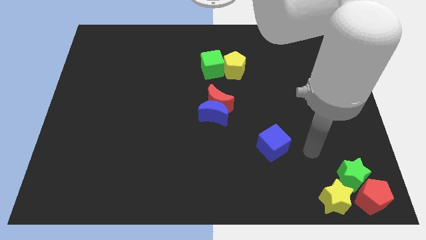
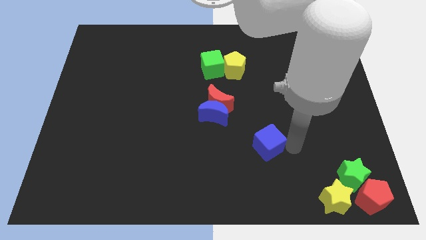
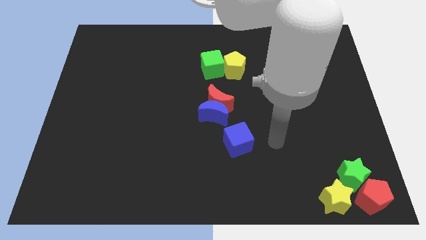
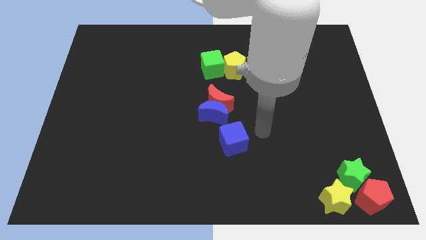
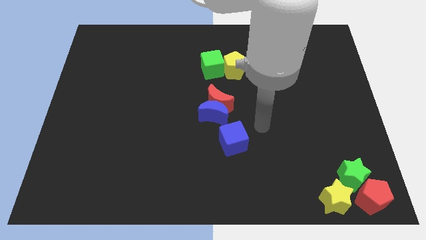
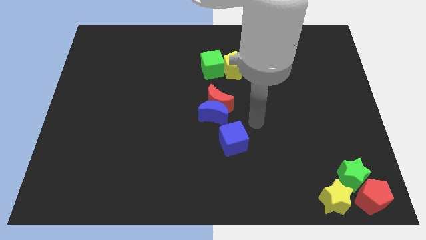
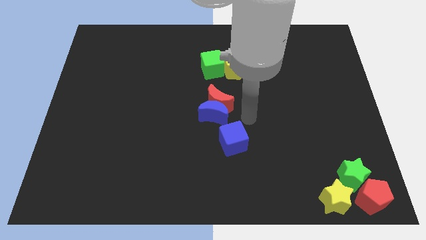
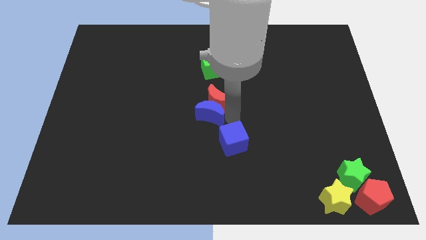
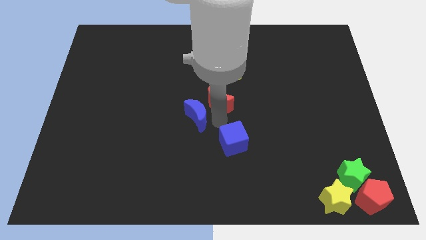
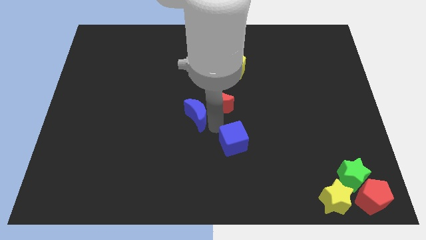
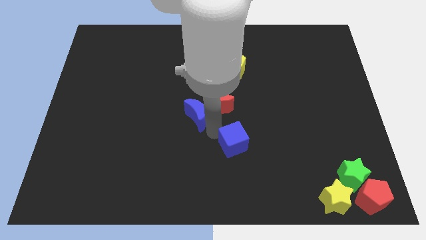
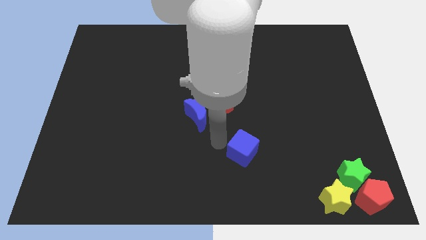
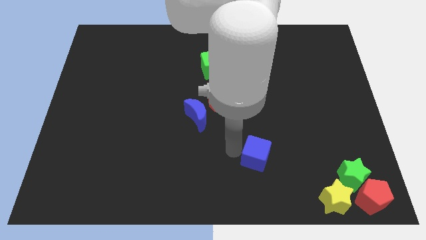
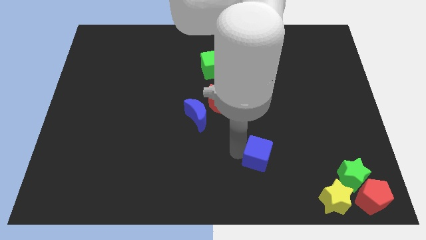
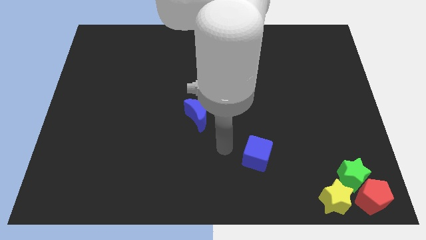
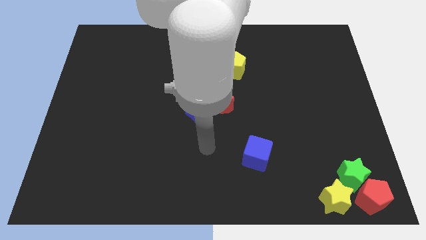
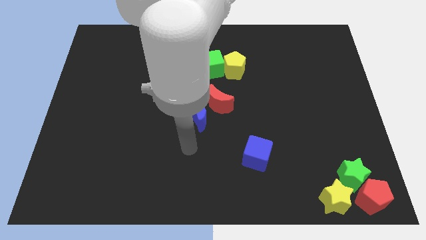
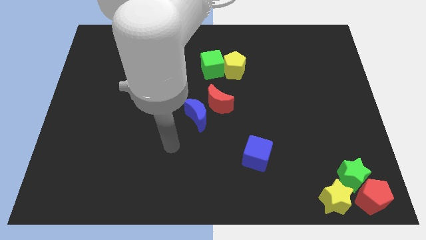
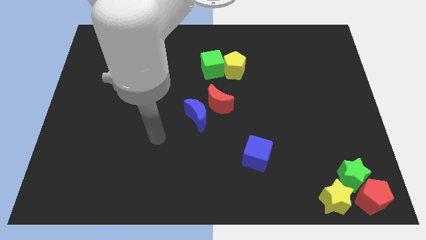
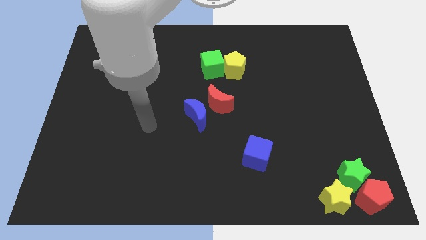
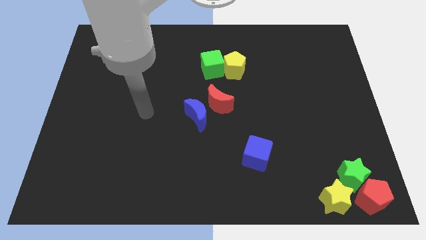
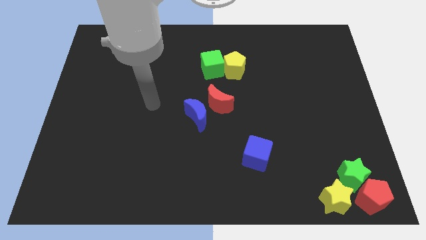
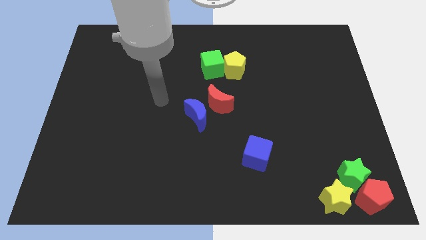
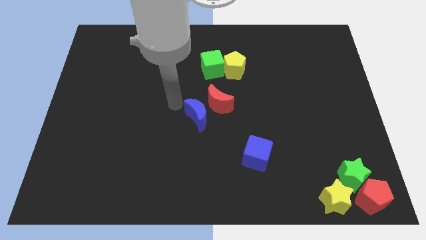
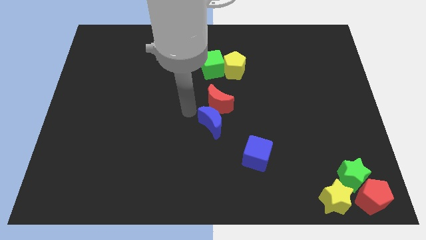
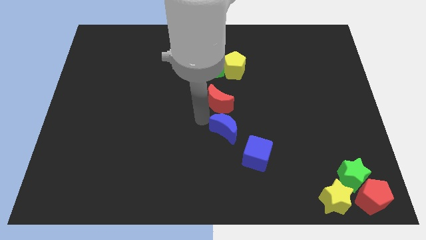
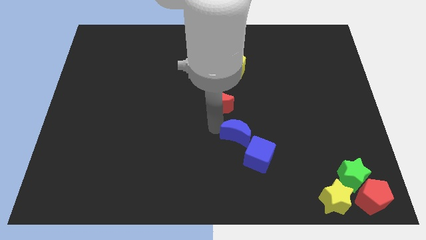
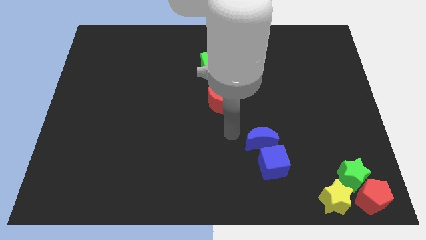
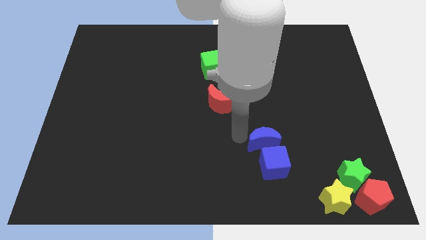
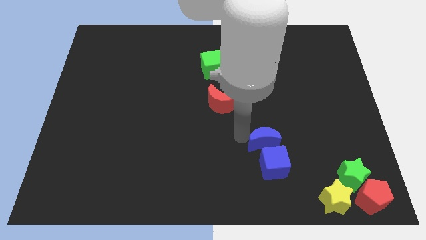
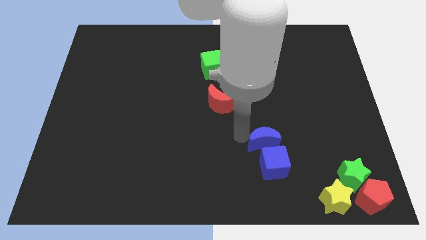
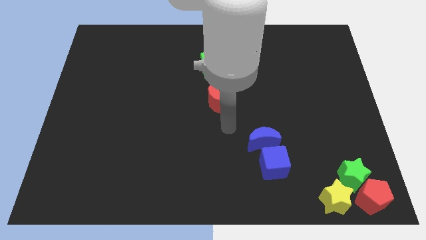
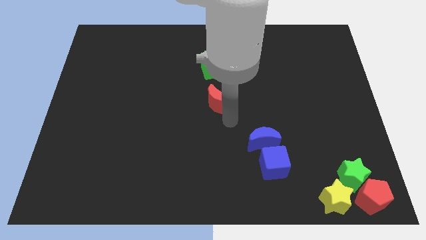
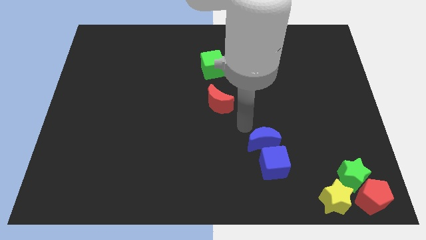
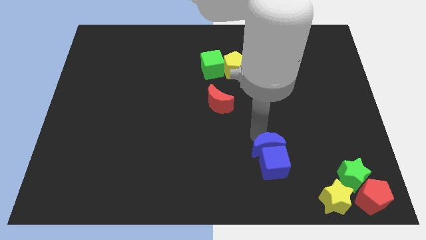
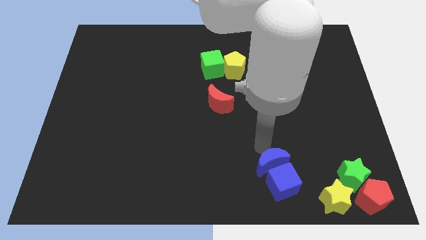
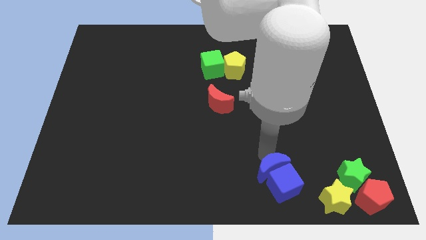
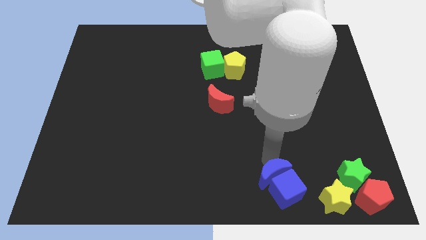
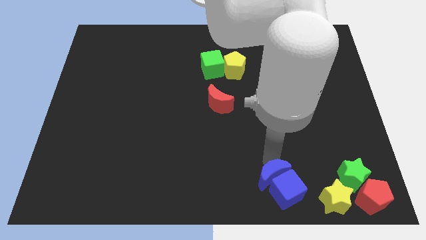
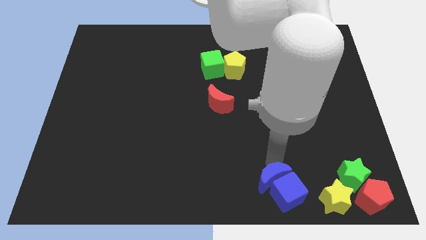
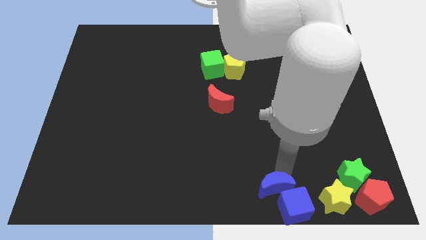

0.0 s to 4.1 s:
move the blue blocks to the bottom right corner of the board

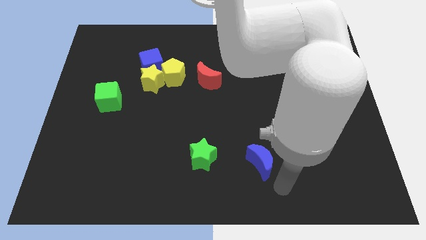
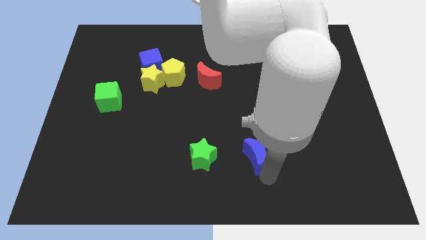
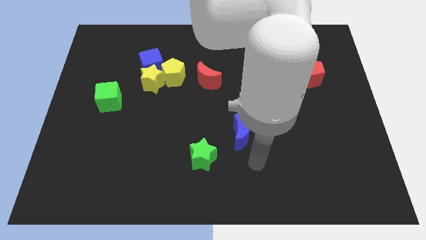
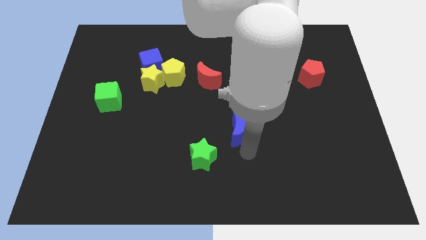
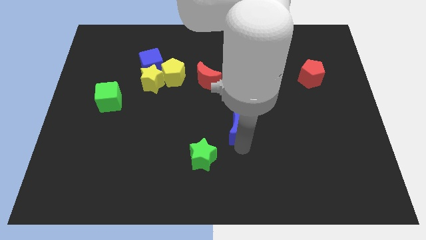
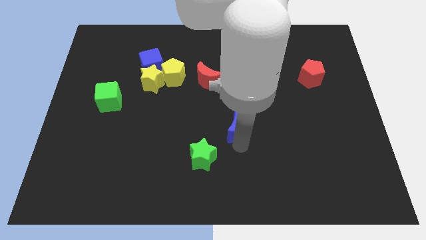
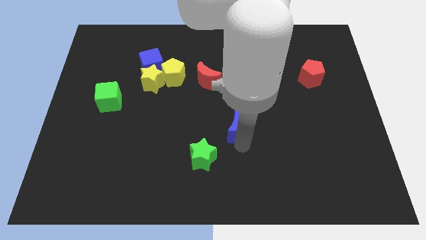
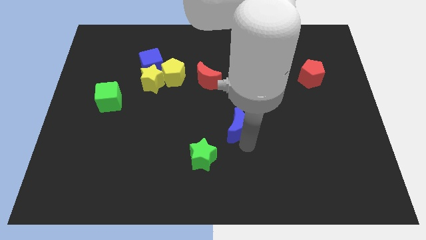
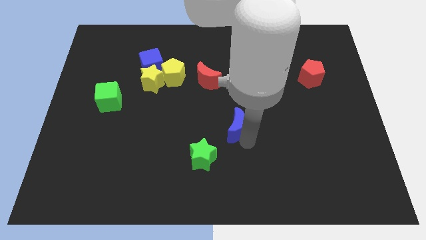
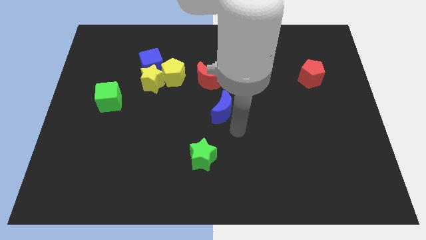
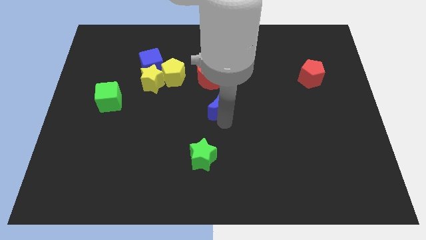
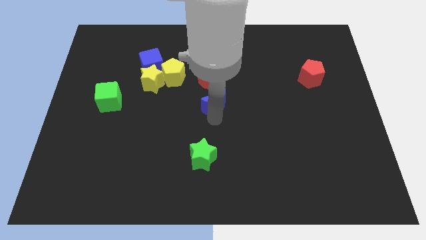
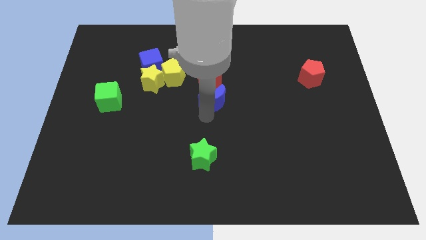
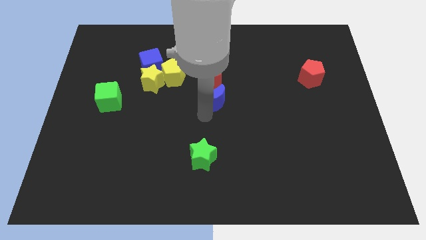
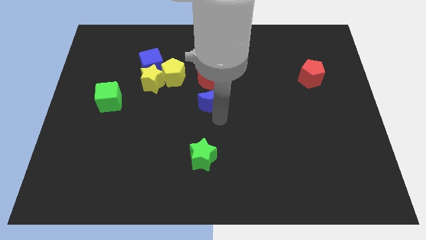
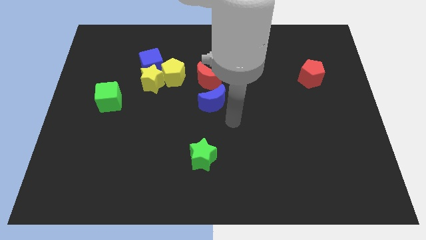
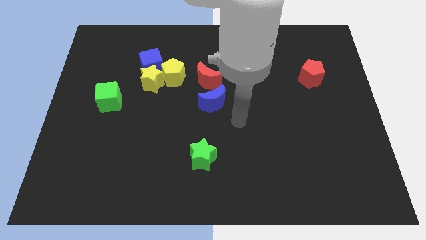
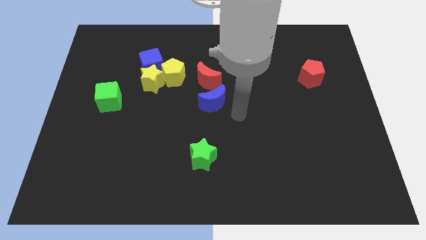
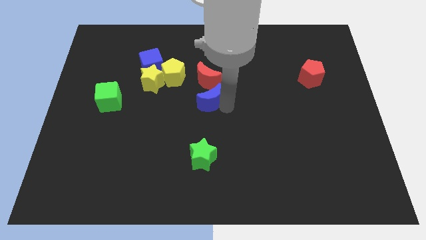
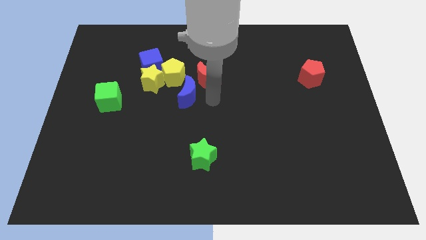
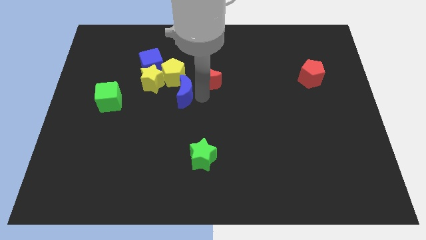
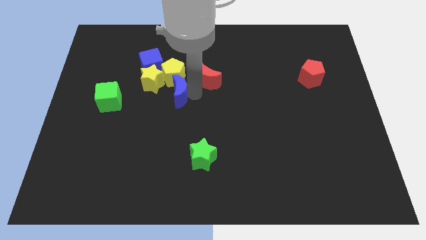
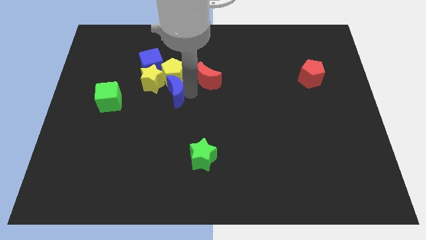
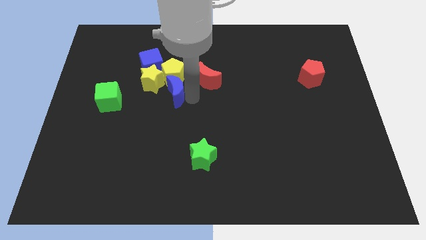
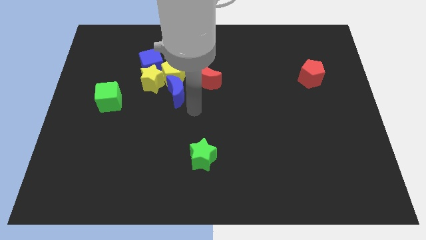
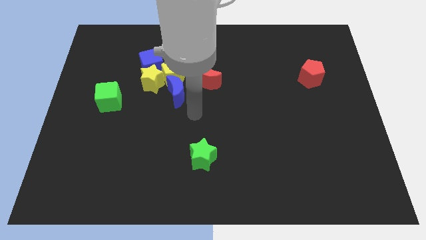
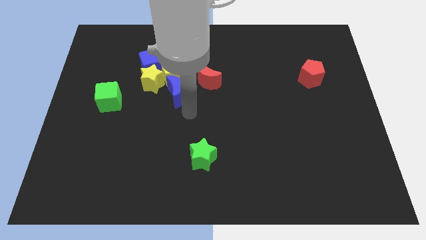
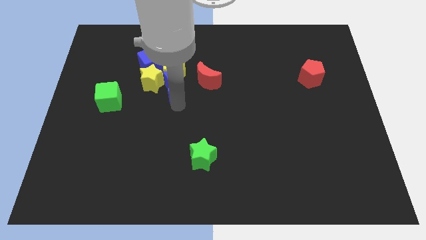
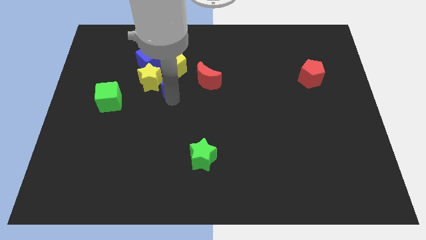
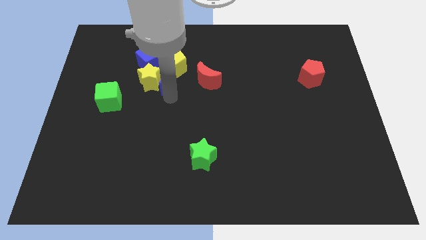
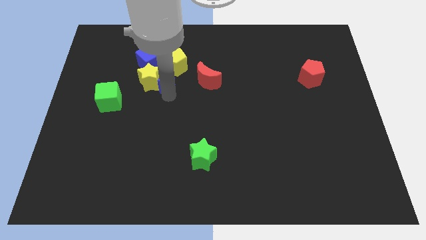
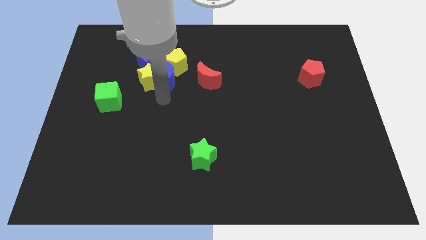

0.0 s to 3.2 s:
move the blue crescent into the group of blocks

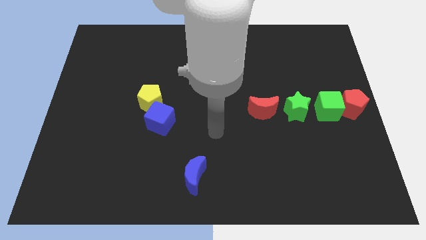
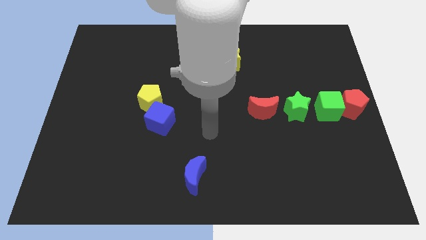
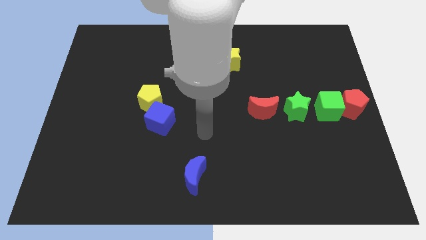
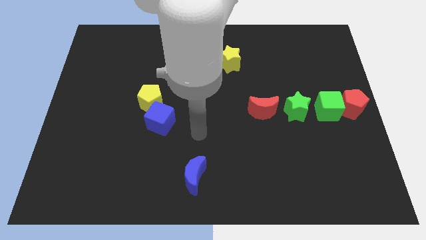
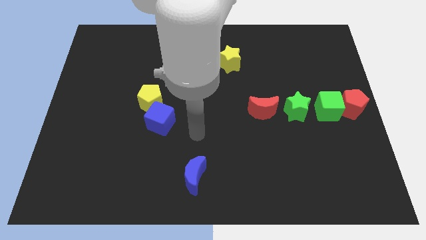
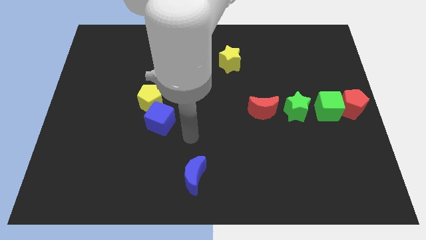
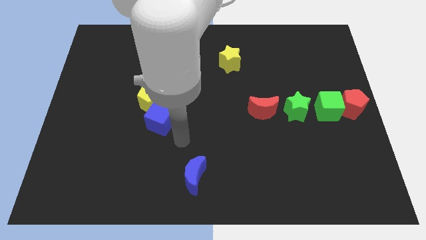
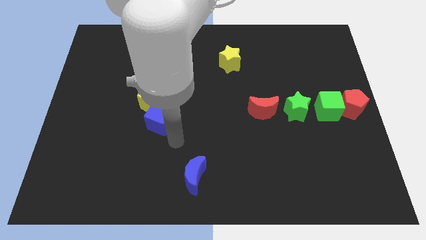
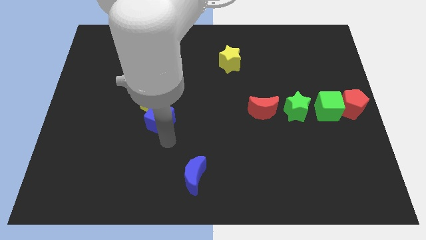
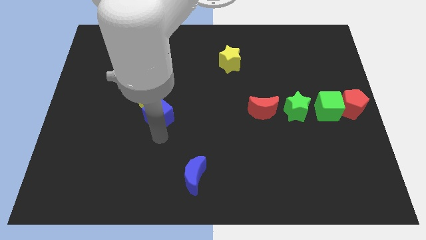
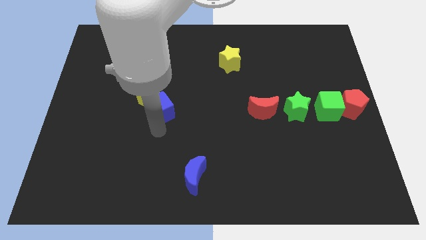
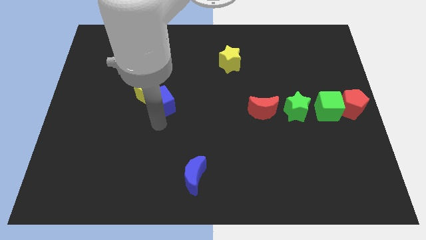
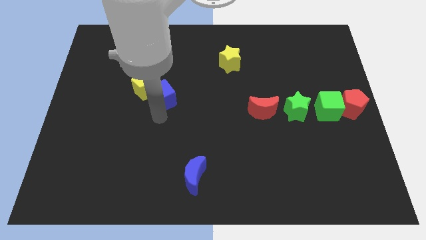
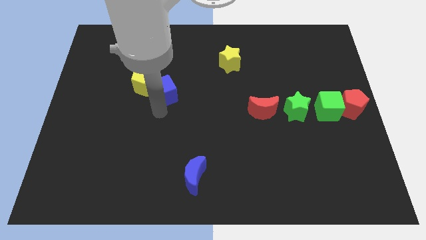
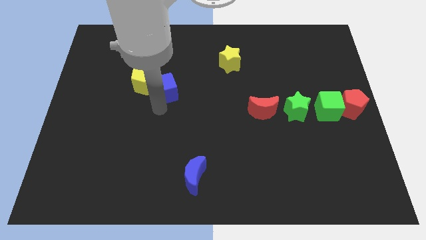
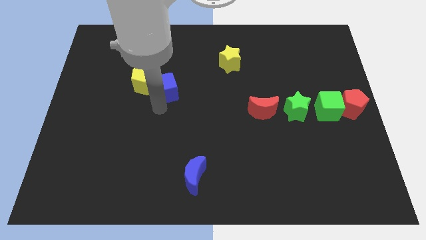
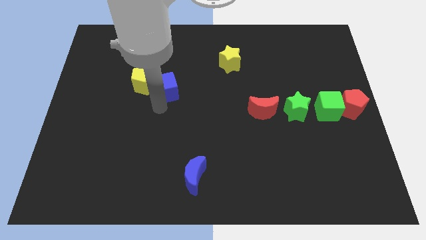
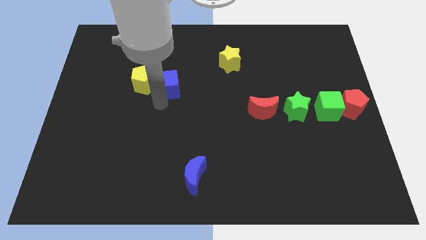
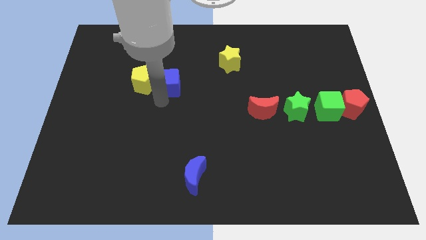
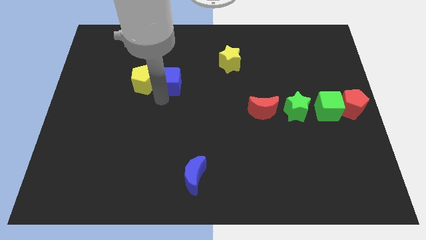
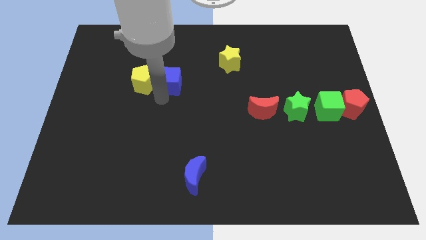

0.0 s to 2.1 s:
move the blue cube along with the yellow pentagon towards the top side
